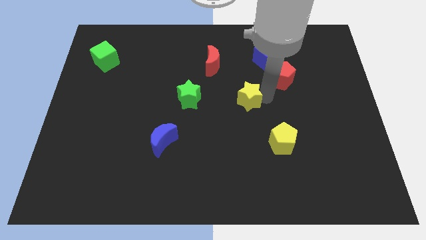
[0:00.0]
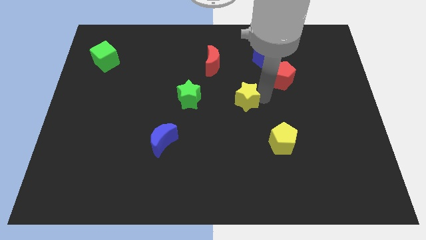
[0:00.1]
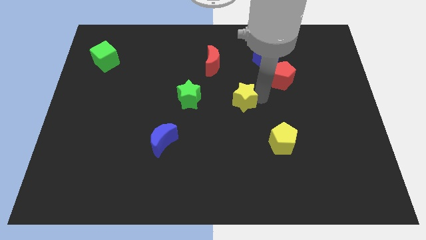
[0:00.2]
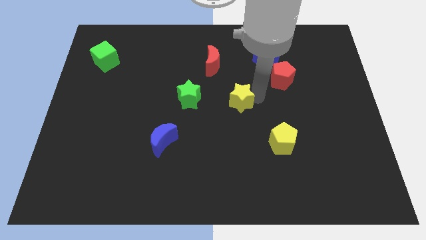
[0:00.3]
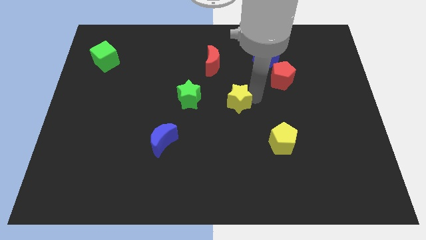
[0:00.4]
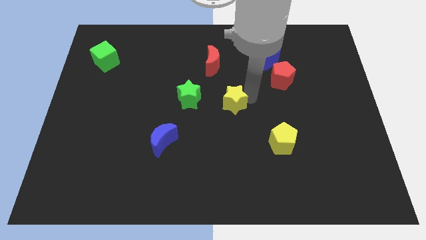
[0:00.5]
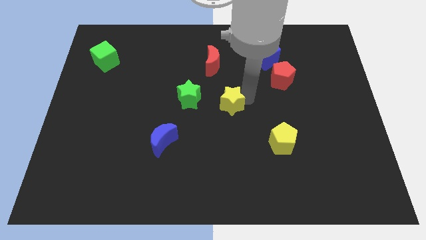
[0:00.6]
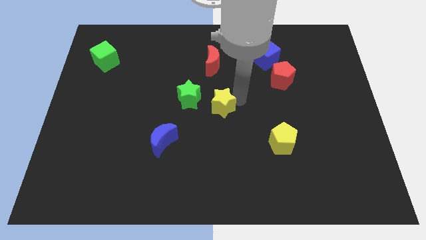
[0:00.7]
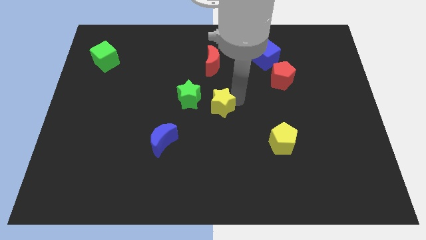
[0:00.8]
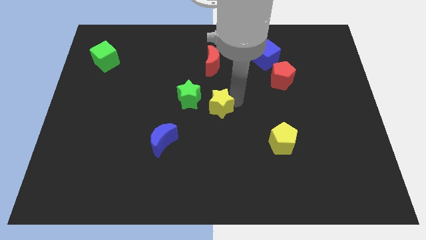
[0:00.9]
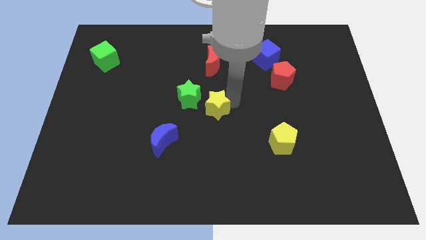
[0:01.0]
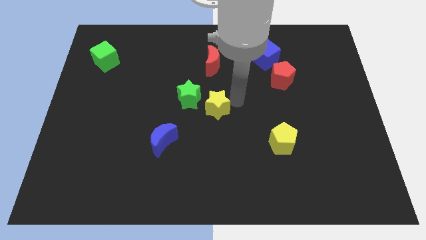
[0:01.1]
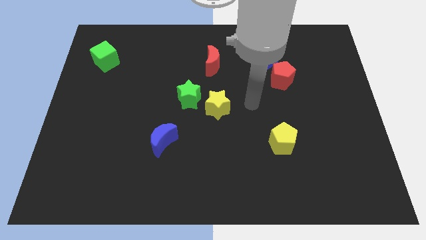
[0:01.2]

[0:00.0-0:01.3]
push the yellow star into the green star

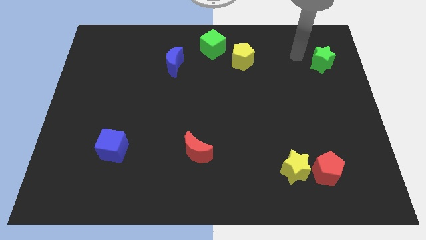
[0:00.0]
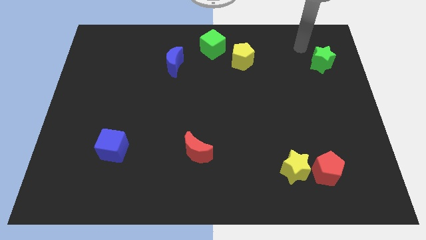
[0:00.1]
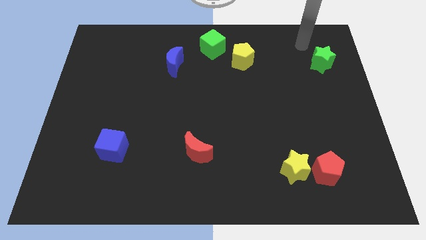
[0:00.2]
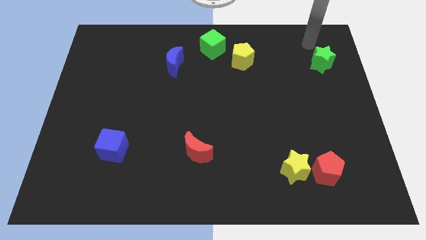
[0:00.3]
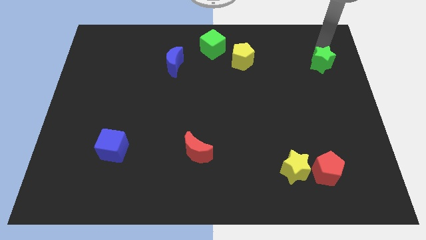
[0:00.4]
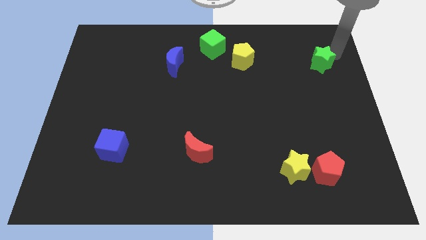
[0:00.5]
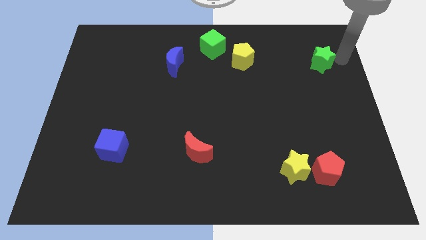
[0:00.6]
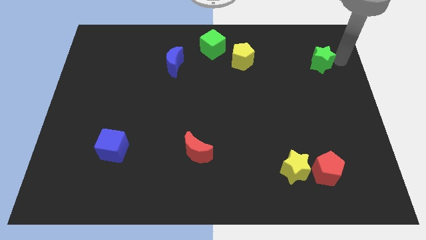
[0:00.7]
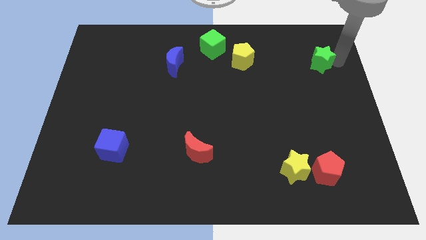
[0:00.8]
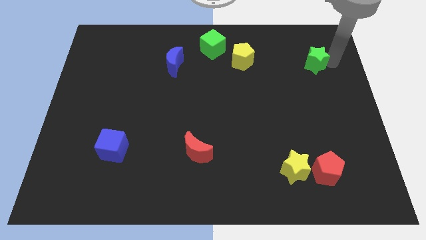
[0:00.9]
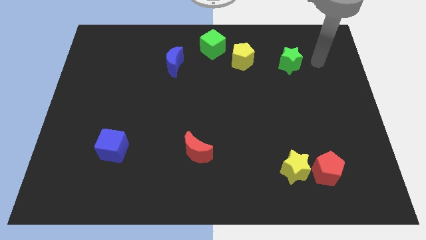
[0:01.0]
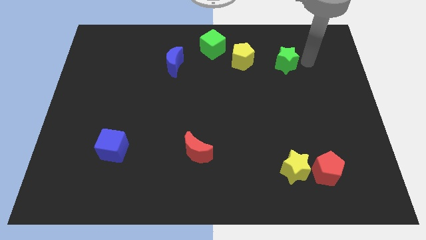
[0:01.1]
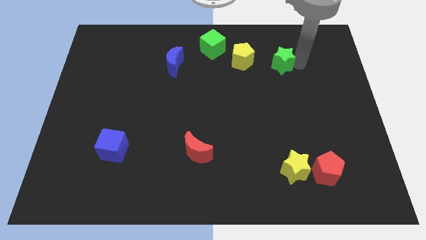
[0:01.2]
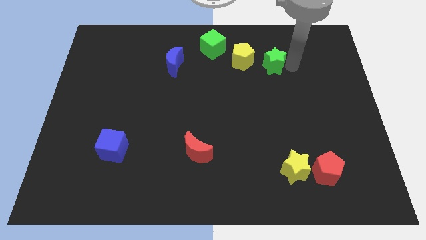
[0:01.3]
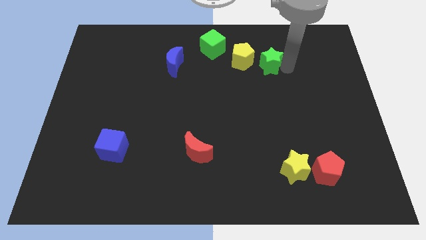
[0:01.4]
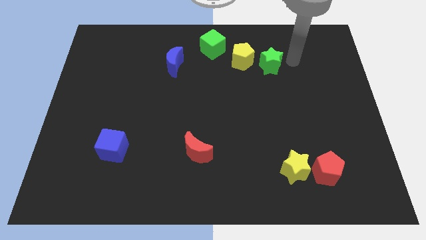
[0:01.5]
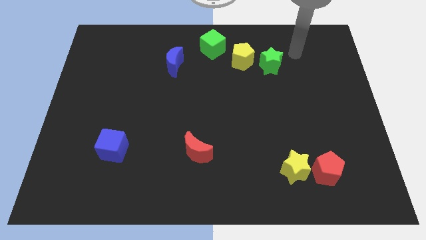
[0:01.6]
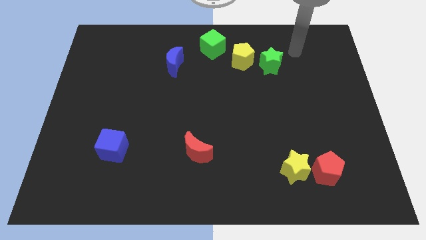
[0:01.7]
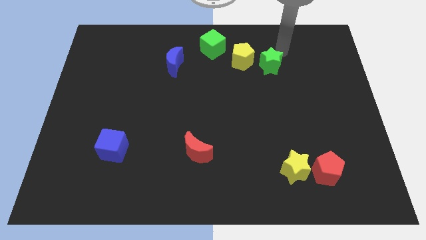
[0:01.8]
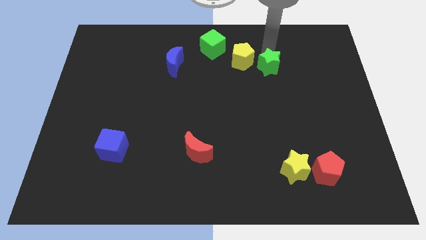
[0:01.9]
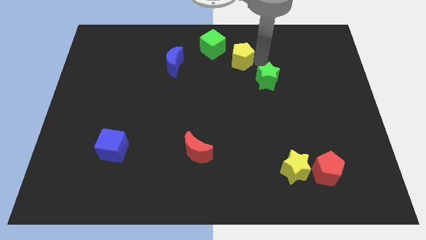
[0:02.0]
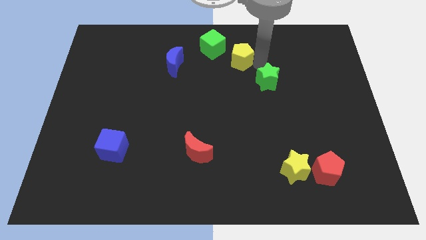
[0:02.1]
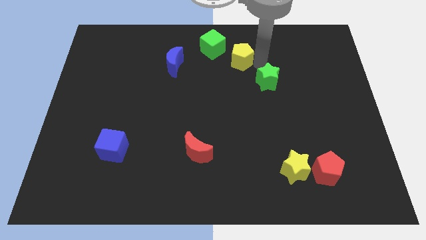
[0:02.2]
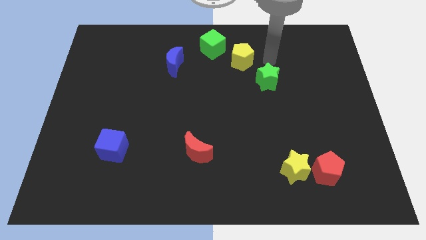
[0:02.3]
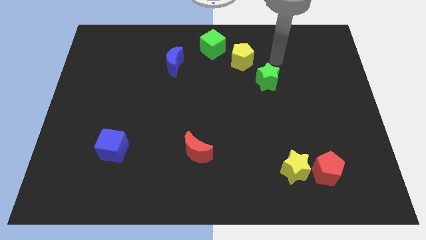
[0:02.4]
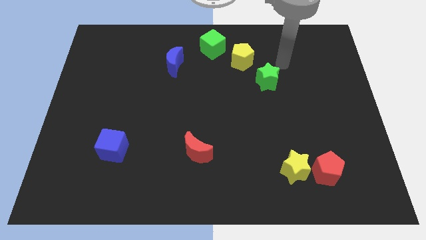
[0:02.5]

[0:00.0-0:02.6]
push the green star to the bottom right side of the yellow pentagon

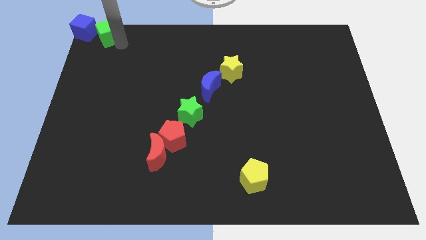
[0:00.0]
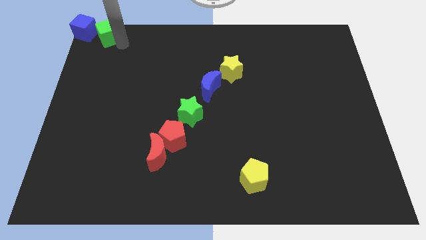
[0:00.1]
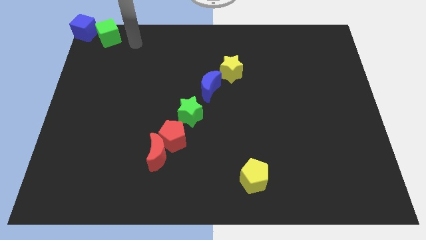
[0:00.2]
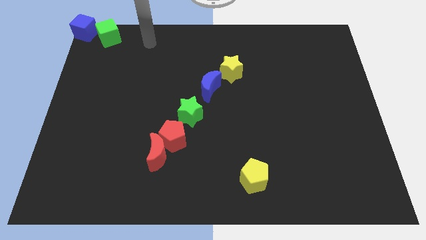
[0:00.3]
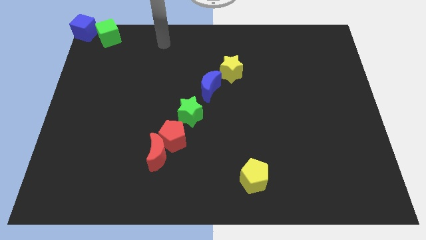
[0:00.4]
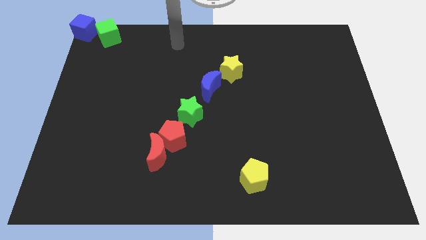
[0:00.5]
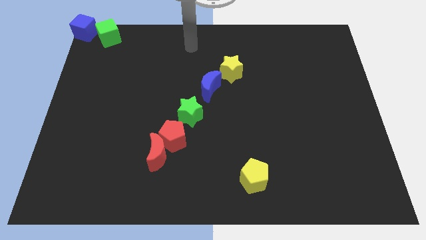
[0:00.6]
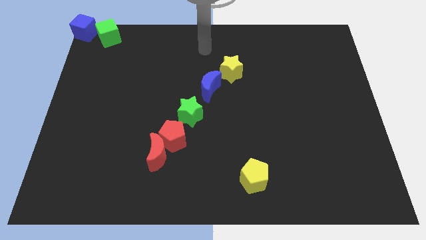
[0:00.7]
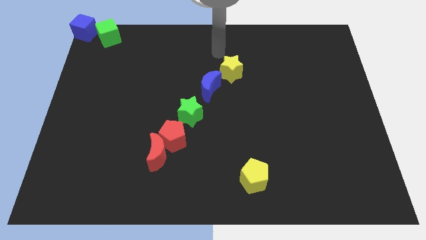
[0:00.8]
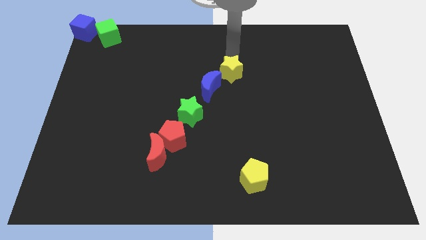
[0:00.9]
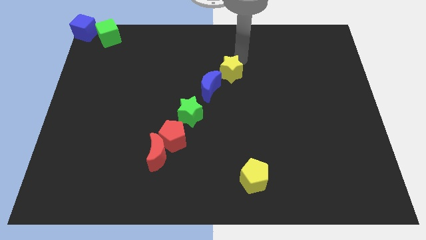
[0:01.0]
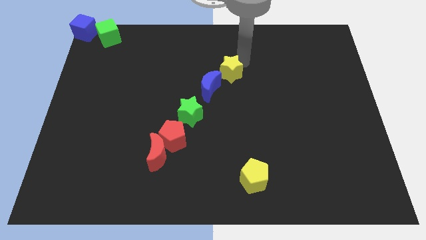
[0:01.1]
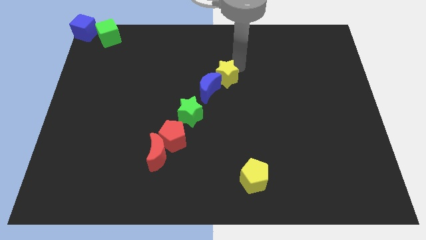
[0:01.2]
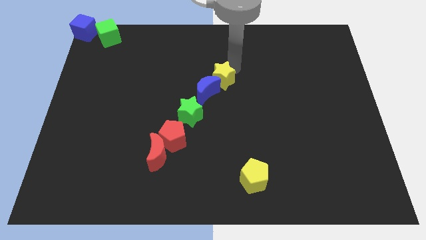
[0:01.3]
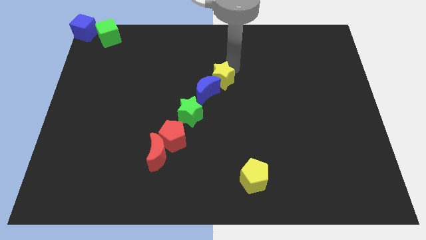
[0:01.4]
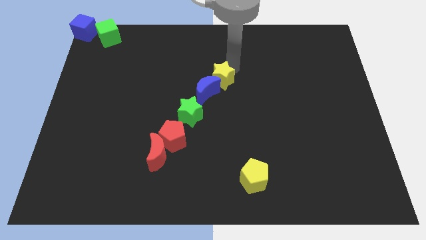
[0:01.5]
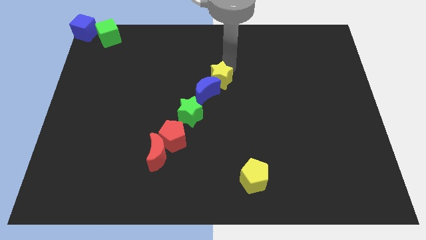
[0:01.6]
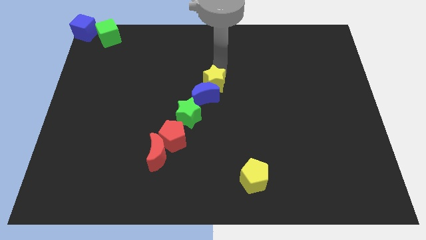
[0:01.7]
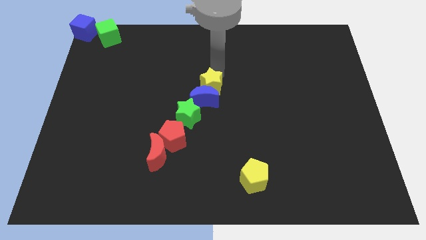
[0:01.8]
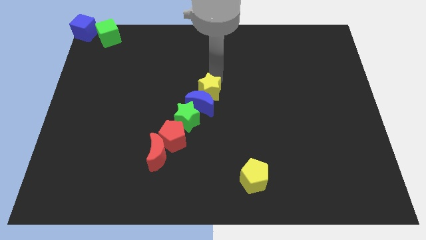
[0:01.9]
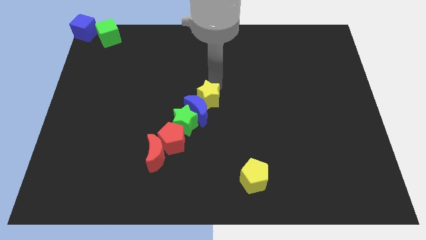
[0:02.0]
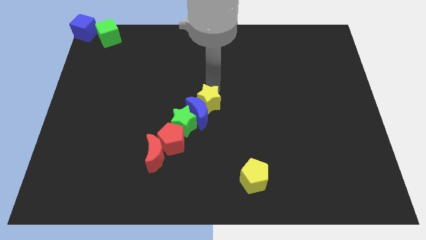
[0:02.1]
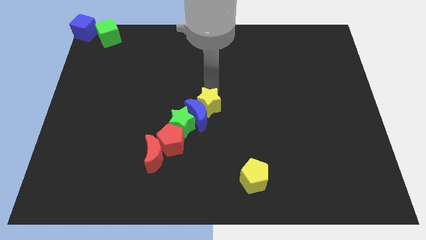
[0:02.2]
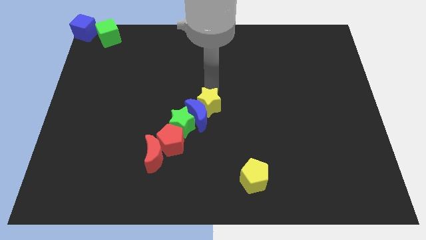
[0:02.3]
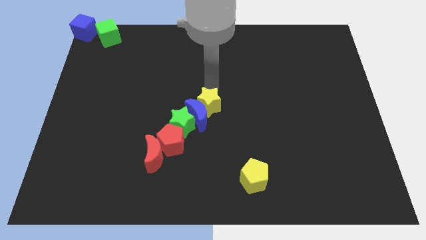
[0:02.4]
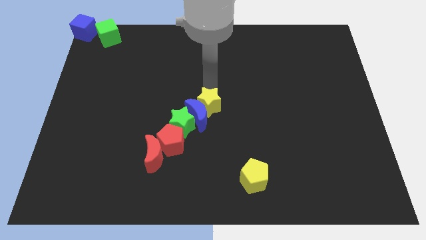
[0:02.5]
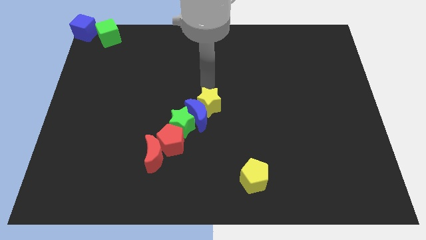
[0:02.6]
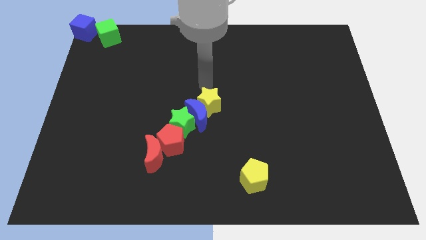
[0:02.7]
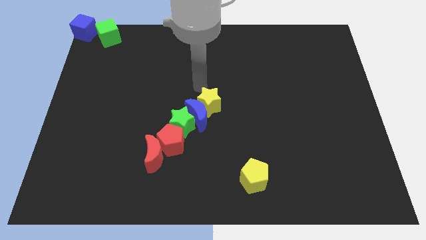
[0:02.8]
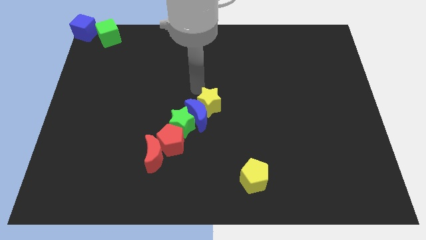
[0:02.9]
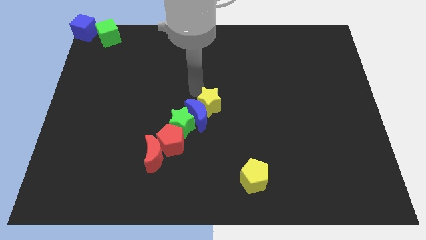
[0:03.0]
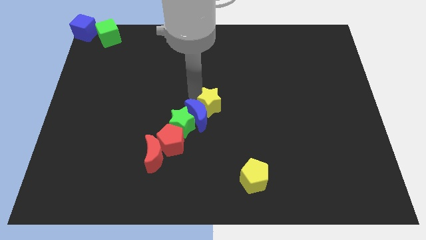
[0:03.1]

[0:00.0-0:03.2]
push the diagonal line of blocks downwards

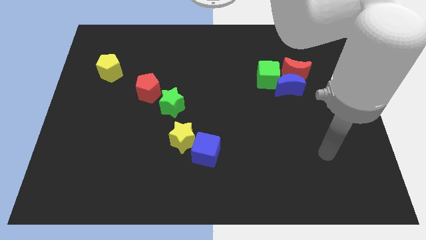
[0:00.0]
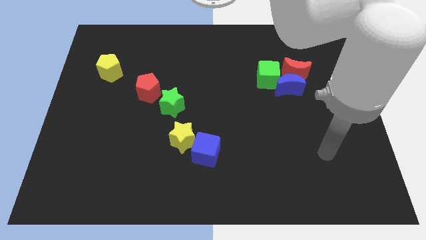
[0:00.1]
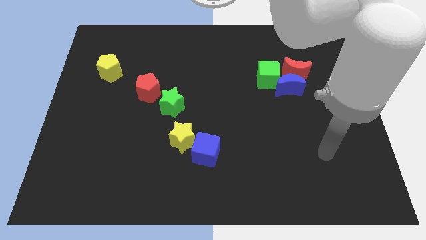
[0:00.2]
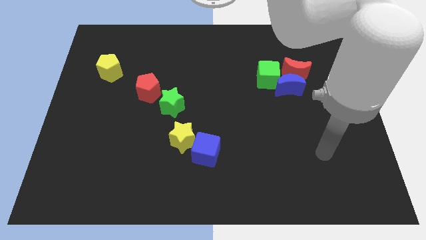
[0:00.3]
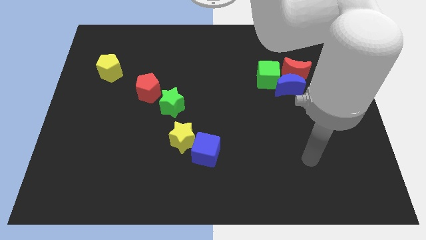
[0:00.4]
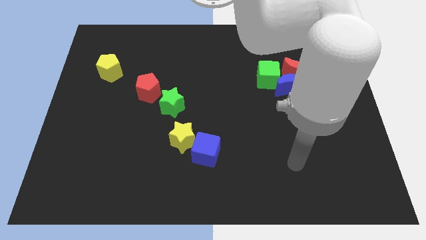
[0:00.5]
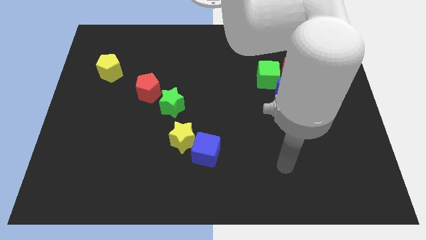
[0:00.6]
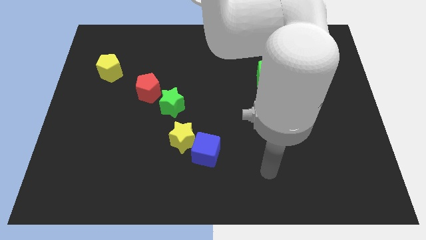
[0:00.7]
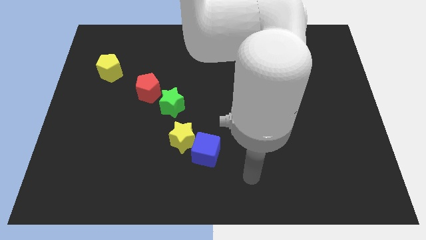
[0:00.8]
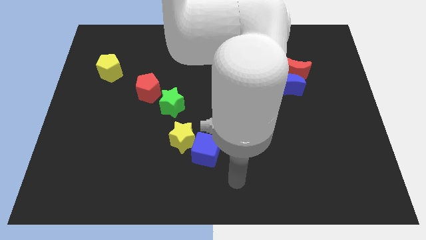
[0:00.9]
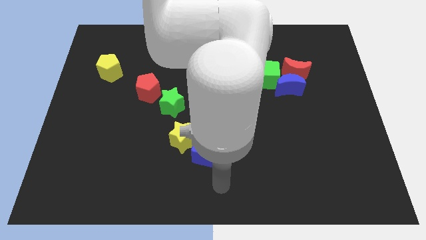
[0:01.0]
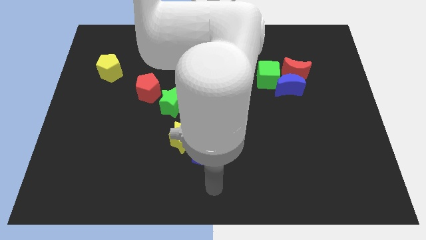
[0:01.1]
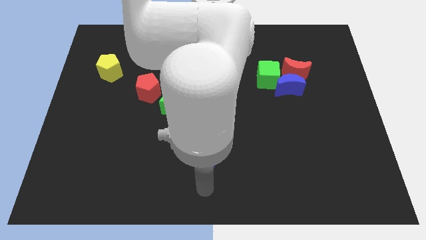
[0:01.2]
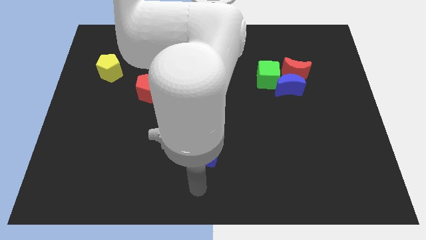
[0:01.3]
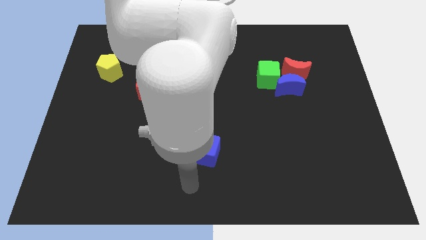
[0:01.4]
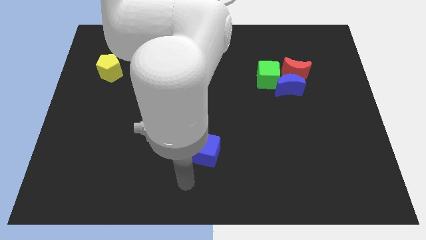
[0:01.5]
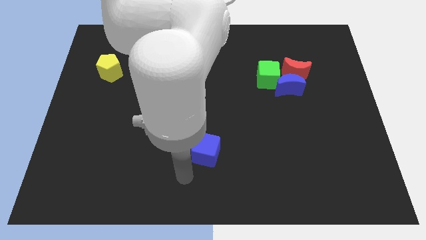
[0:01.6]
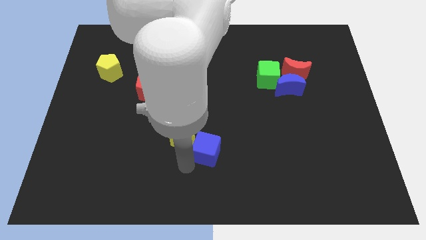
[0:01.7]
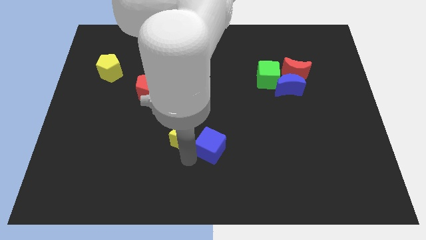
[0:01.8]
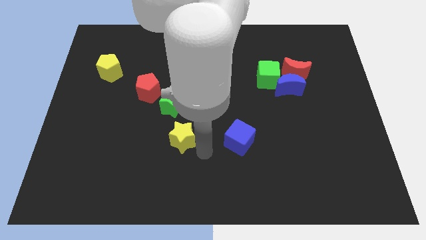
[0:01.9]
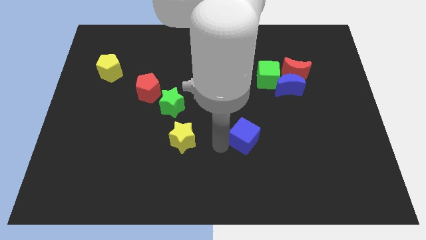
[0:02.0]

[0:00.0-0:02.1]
move the blue cube away from the yellow star
